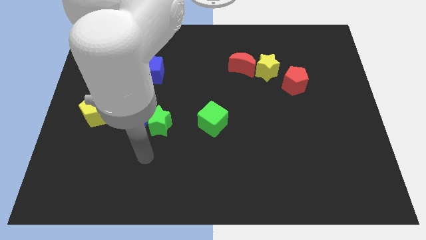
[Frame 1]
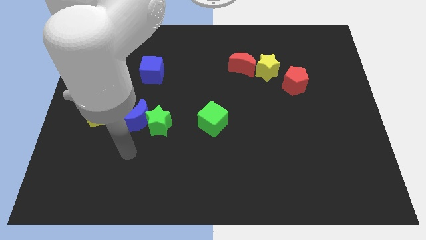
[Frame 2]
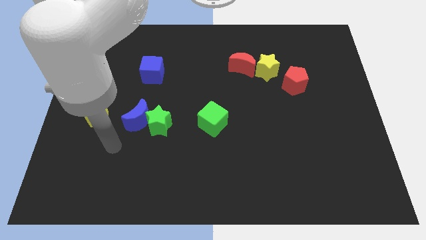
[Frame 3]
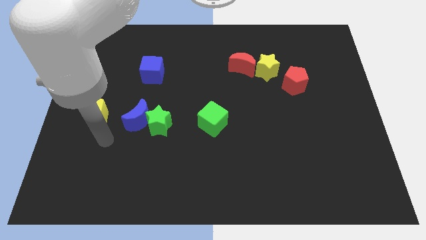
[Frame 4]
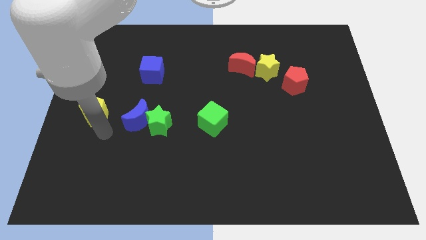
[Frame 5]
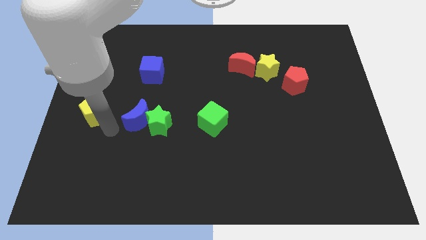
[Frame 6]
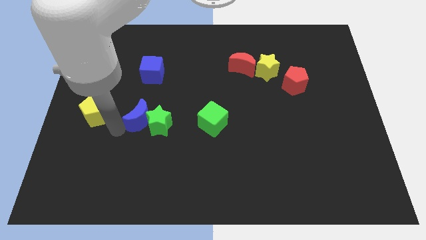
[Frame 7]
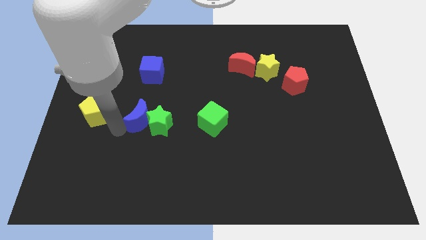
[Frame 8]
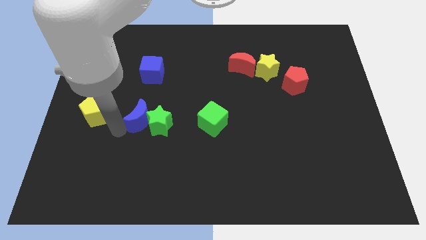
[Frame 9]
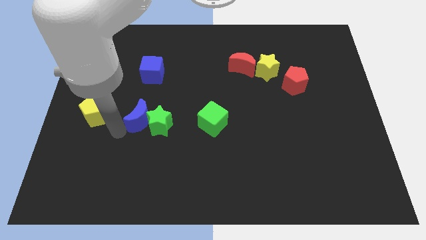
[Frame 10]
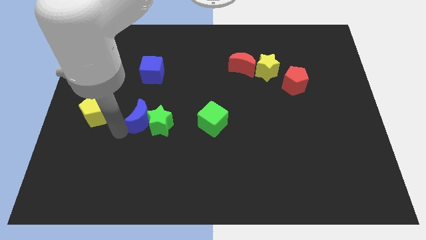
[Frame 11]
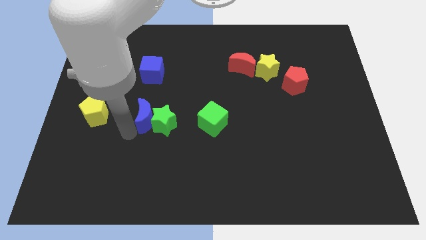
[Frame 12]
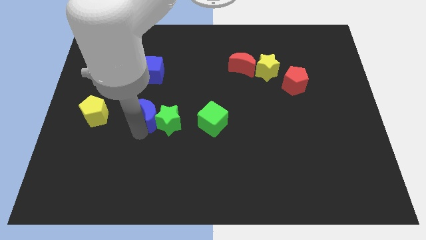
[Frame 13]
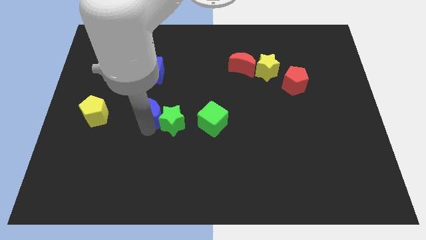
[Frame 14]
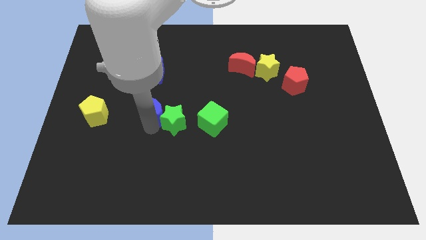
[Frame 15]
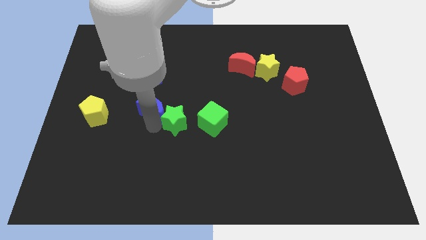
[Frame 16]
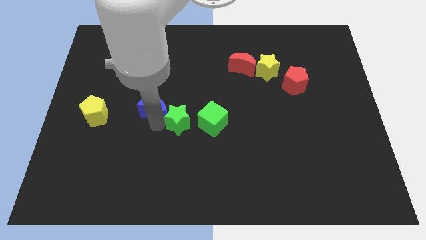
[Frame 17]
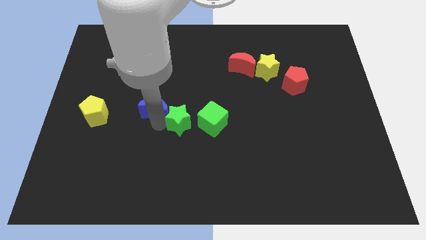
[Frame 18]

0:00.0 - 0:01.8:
move the blue moon slightly to the left of the green star

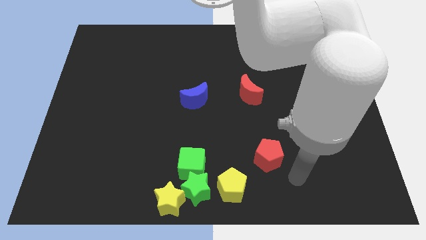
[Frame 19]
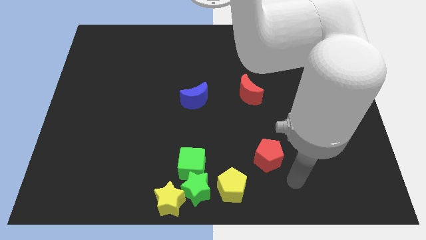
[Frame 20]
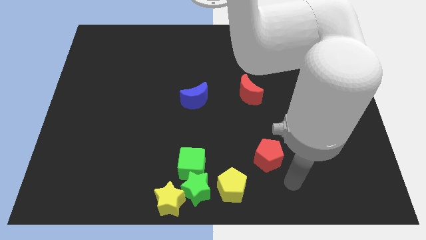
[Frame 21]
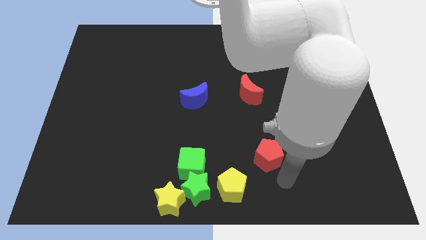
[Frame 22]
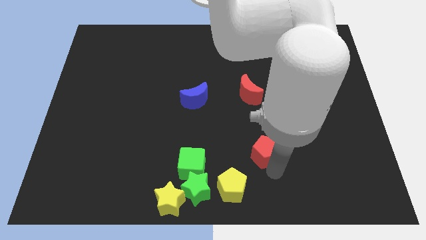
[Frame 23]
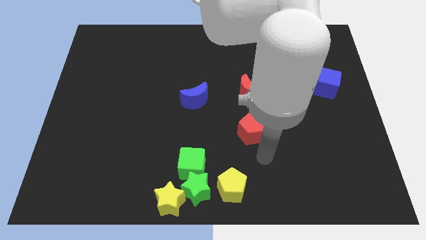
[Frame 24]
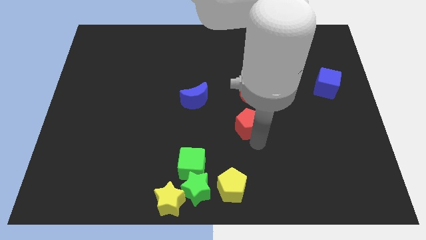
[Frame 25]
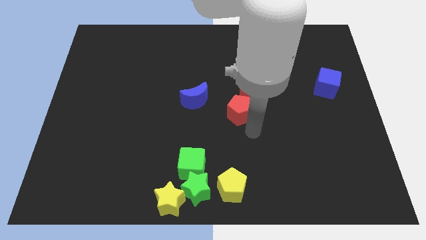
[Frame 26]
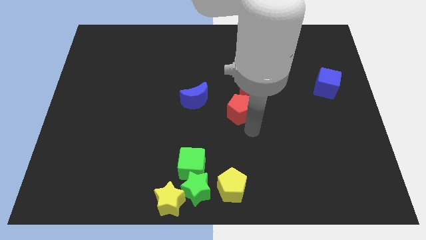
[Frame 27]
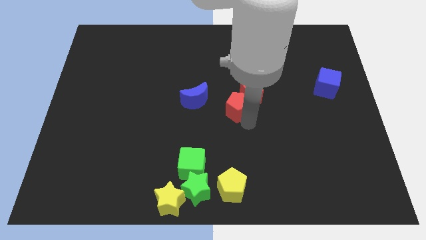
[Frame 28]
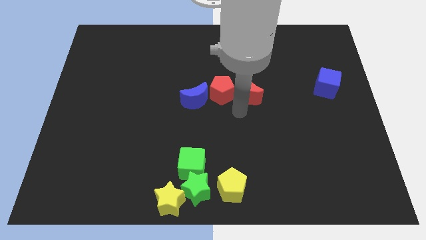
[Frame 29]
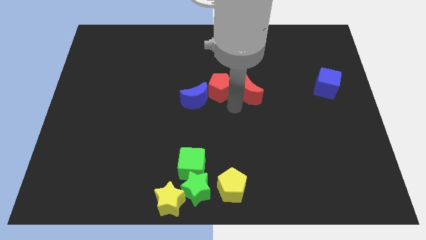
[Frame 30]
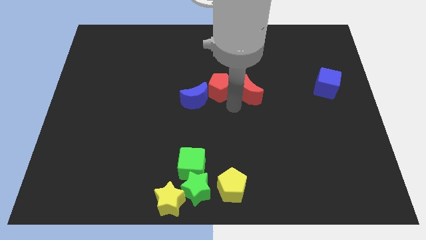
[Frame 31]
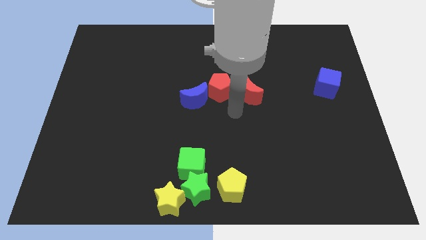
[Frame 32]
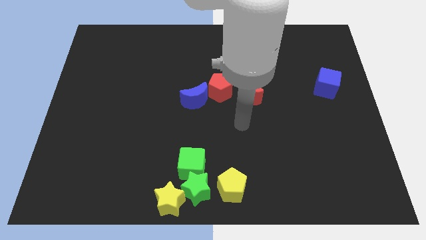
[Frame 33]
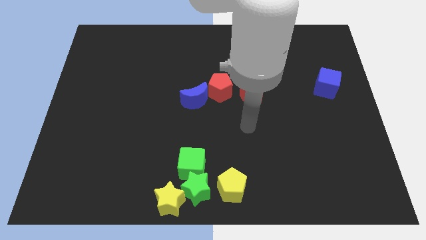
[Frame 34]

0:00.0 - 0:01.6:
move the red pentagon towards the blue crescent on the center of the board

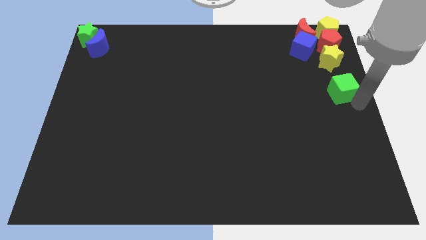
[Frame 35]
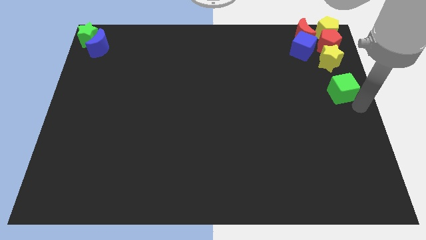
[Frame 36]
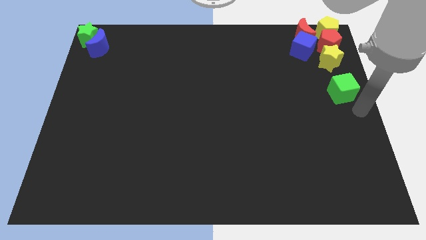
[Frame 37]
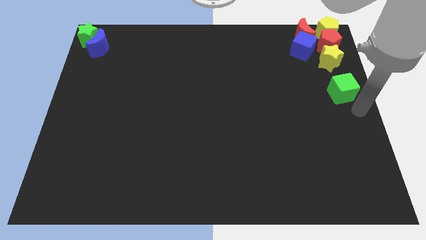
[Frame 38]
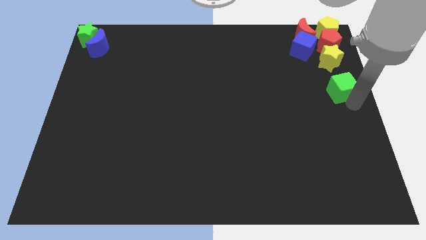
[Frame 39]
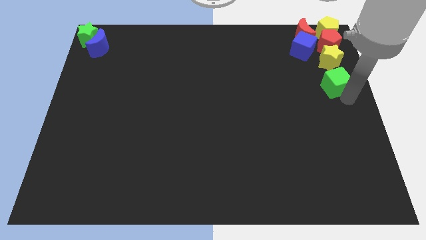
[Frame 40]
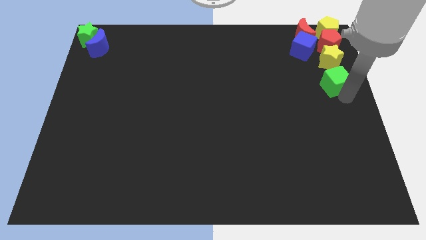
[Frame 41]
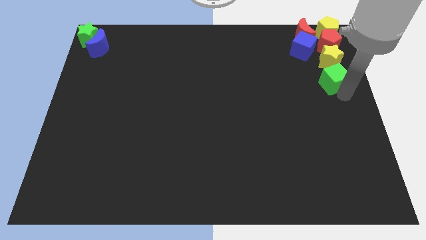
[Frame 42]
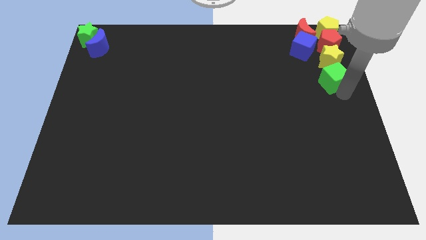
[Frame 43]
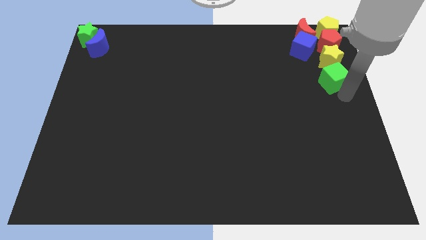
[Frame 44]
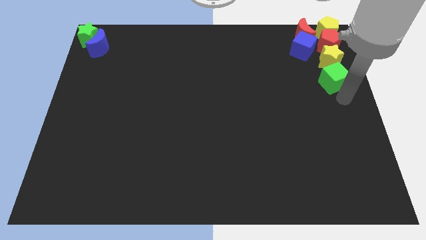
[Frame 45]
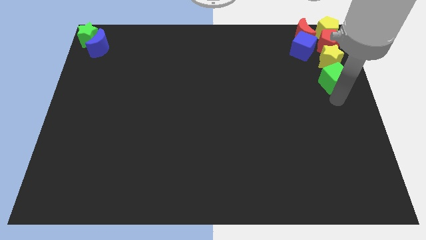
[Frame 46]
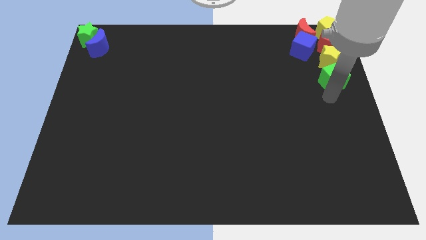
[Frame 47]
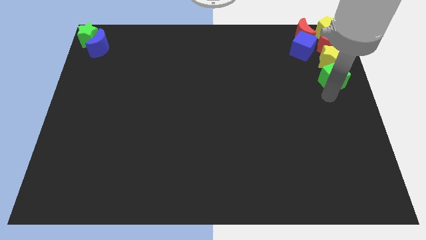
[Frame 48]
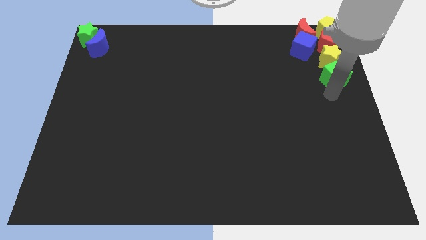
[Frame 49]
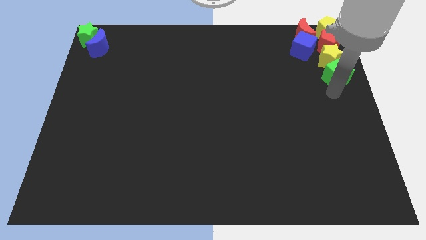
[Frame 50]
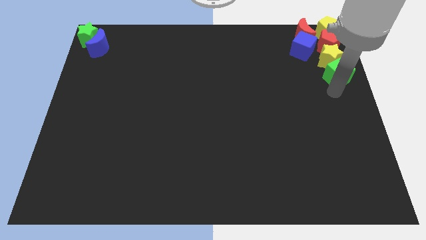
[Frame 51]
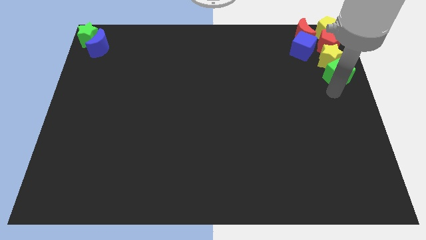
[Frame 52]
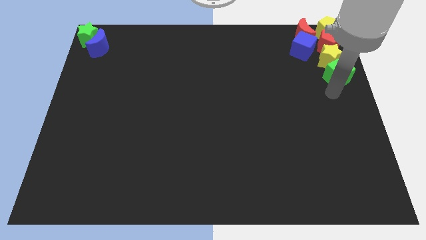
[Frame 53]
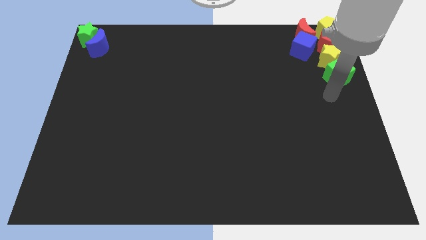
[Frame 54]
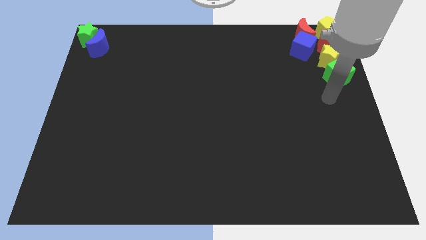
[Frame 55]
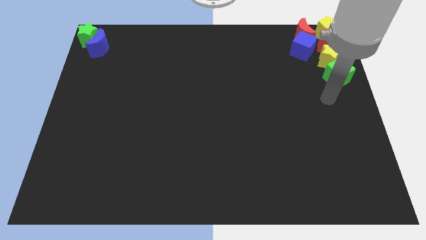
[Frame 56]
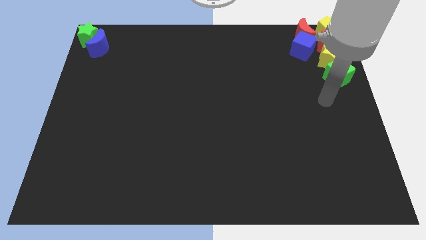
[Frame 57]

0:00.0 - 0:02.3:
push the green cube into the bottom of the yellow star

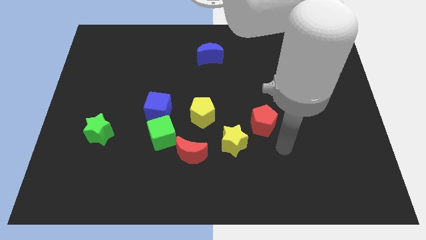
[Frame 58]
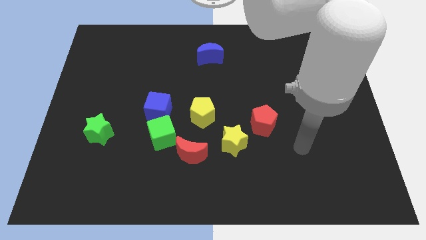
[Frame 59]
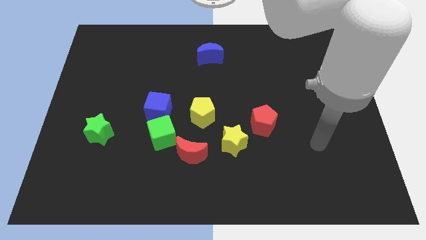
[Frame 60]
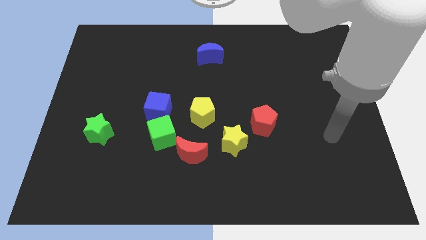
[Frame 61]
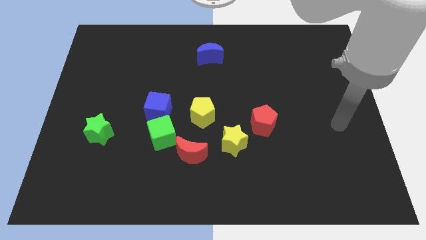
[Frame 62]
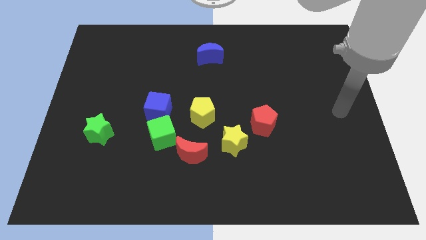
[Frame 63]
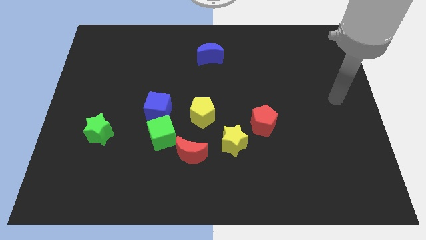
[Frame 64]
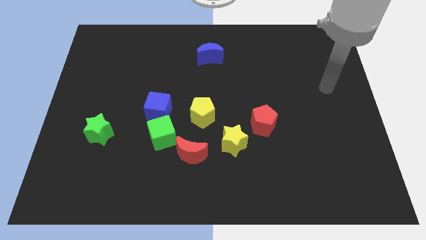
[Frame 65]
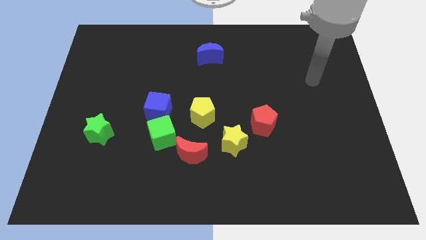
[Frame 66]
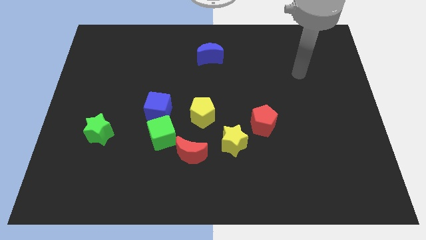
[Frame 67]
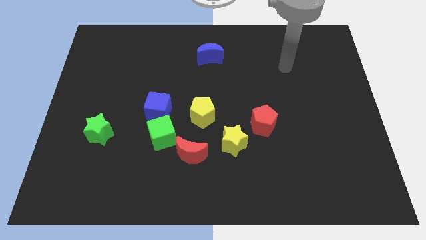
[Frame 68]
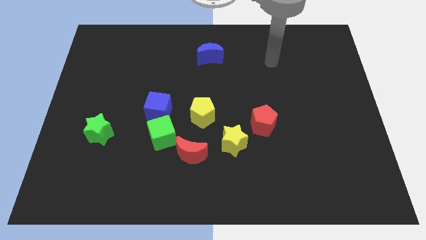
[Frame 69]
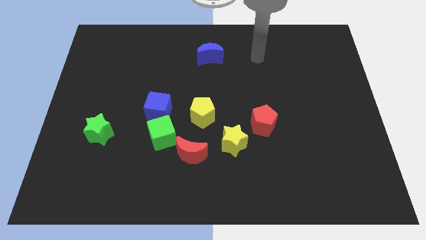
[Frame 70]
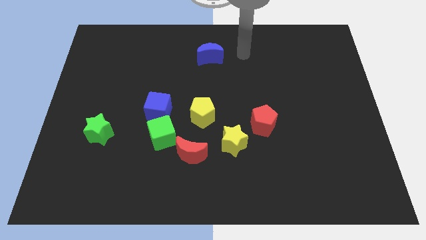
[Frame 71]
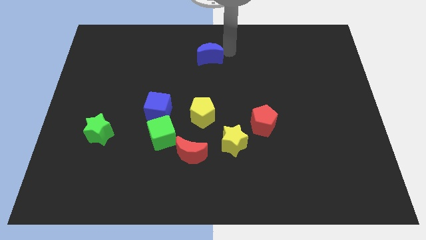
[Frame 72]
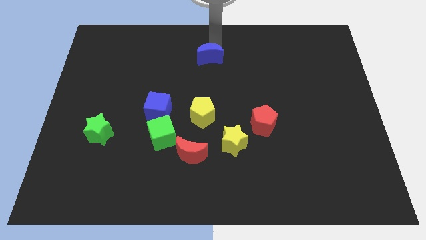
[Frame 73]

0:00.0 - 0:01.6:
point your arm at the top side of the blue moon

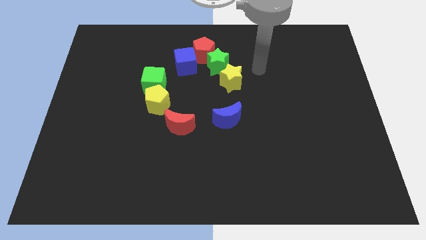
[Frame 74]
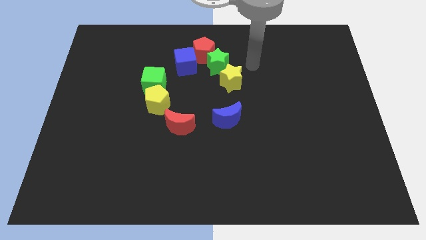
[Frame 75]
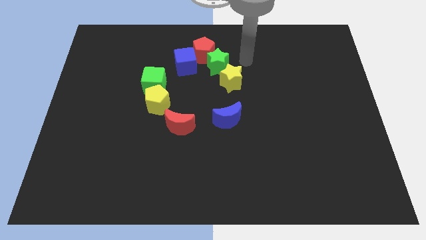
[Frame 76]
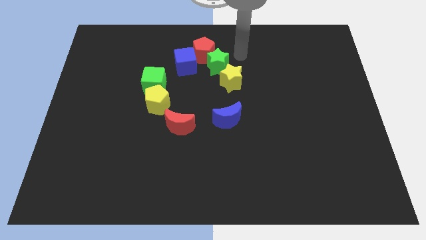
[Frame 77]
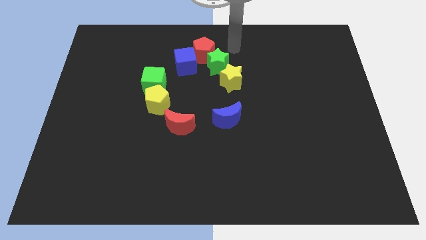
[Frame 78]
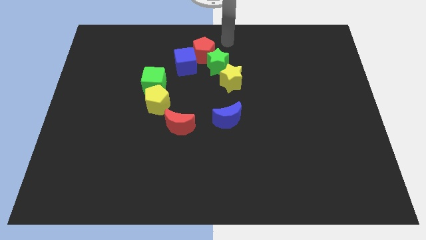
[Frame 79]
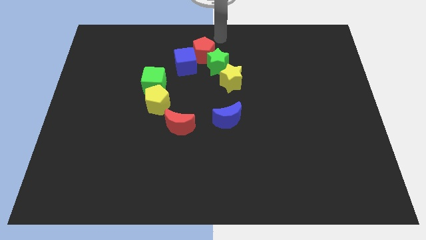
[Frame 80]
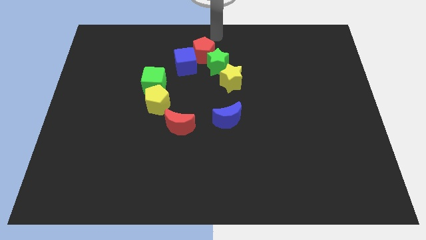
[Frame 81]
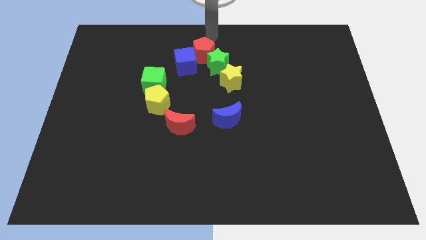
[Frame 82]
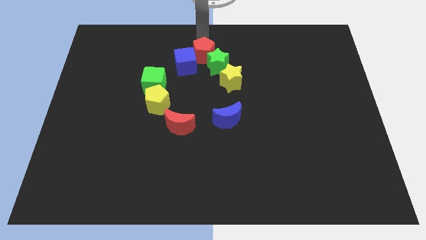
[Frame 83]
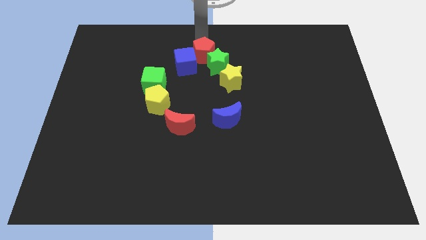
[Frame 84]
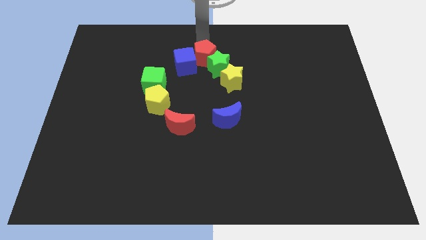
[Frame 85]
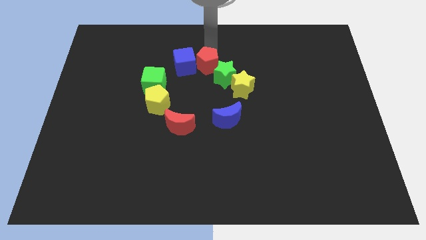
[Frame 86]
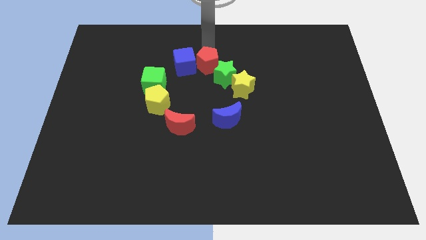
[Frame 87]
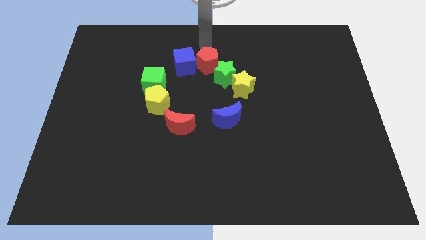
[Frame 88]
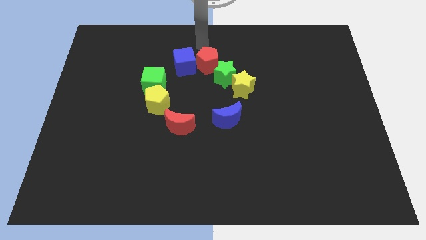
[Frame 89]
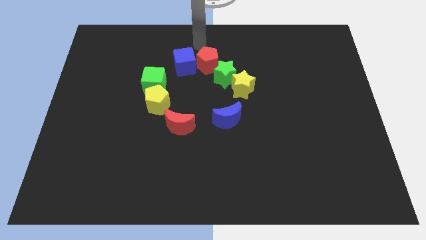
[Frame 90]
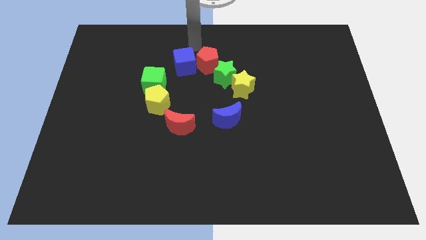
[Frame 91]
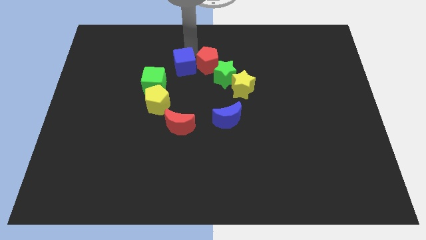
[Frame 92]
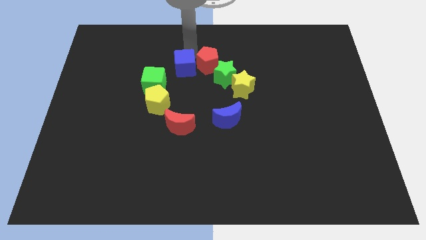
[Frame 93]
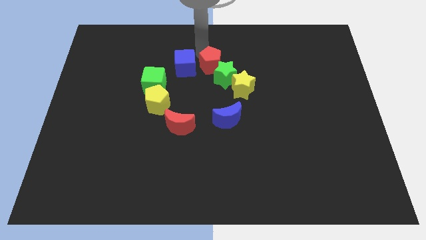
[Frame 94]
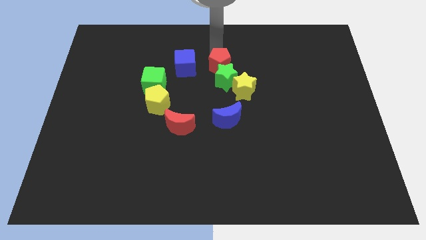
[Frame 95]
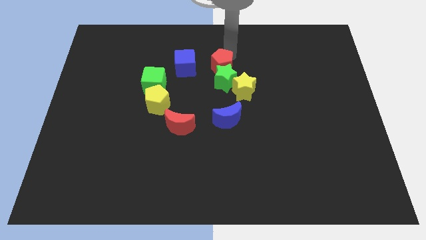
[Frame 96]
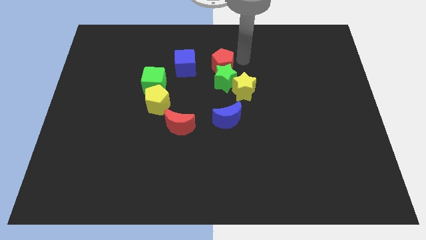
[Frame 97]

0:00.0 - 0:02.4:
place the red pentagon above the green star
